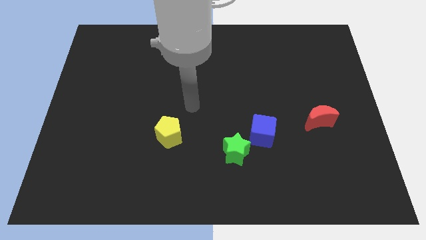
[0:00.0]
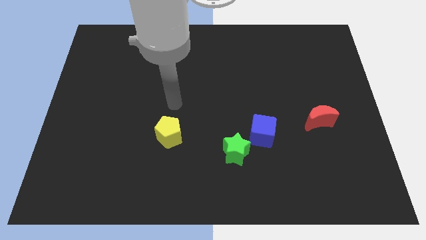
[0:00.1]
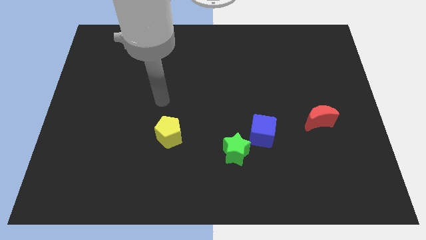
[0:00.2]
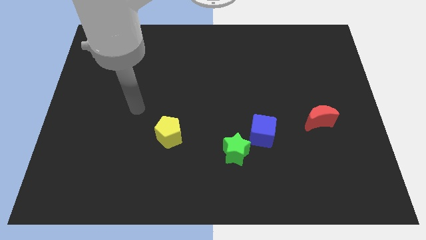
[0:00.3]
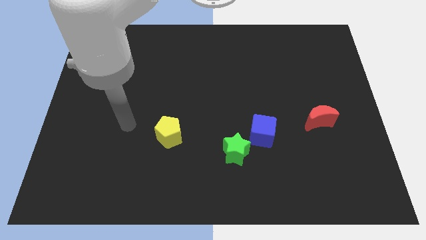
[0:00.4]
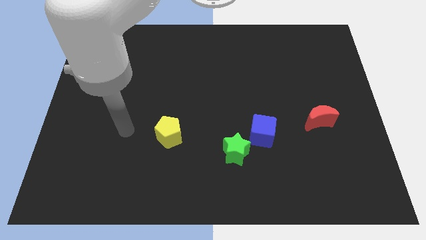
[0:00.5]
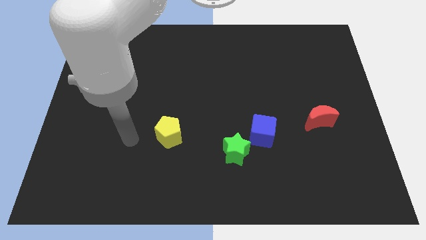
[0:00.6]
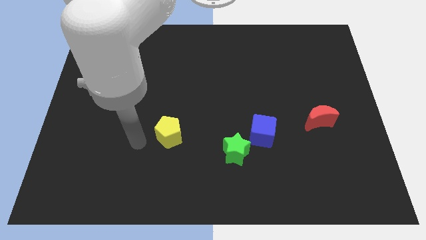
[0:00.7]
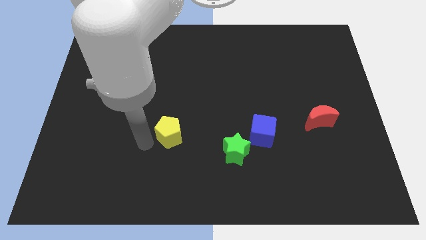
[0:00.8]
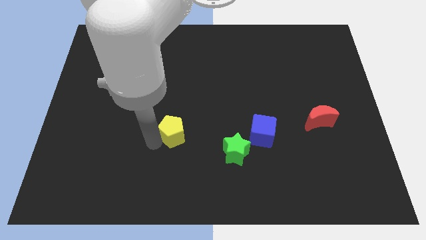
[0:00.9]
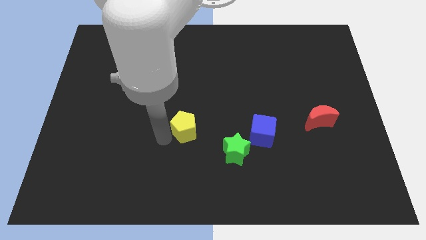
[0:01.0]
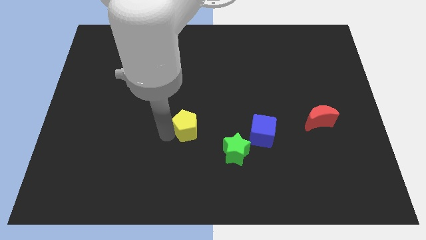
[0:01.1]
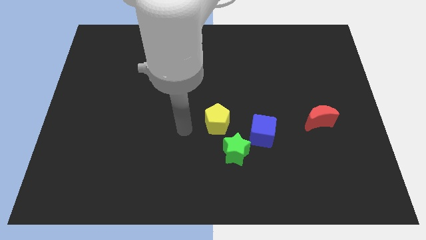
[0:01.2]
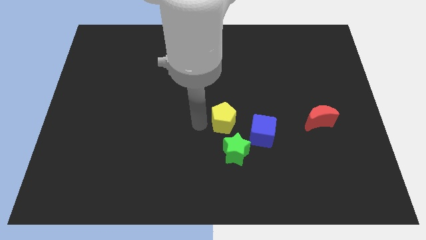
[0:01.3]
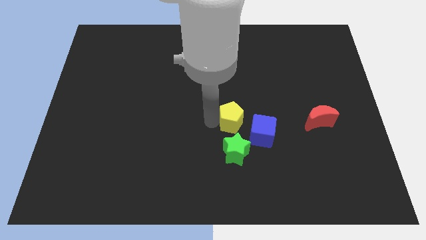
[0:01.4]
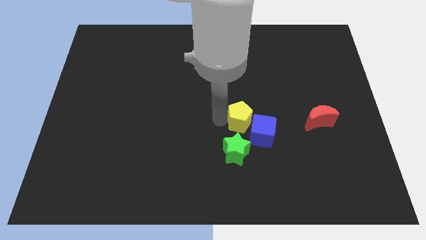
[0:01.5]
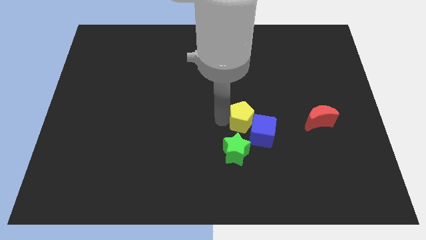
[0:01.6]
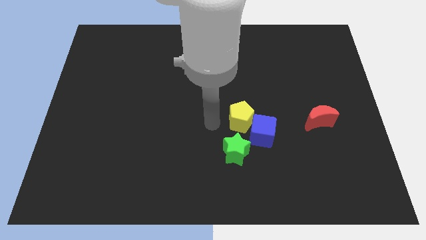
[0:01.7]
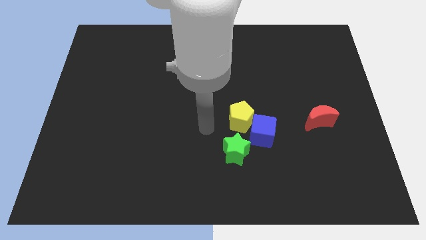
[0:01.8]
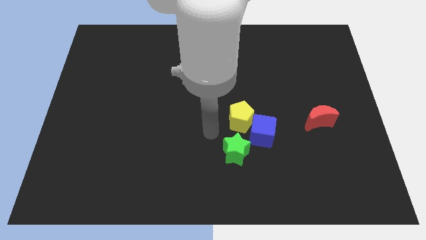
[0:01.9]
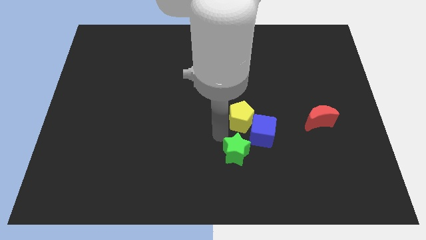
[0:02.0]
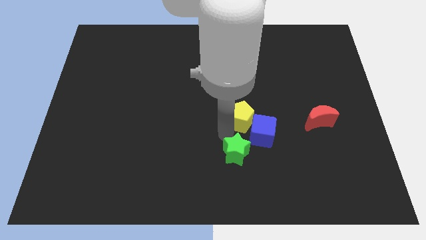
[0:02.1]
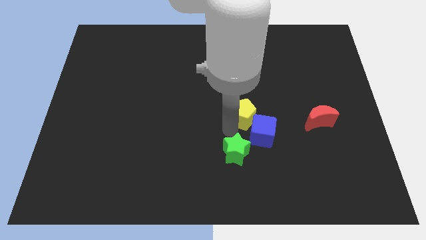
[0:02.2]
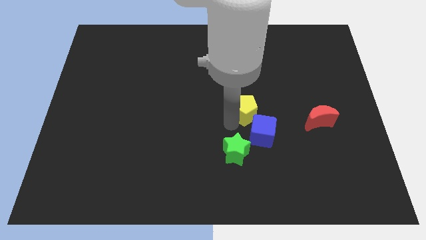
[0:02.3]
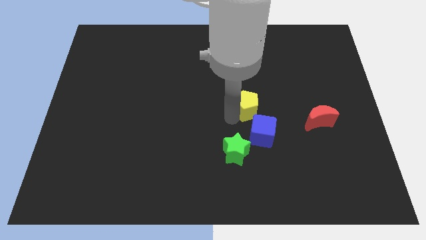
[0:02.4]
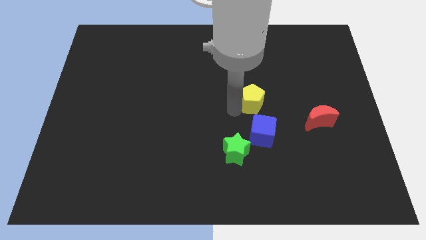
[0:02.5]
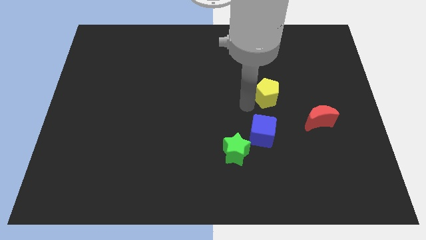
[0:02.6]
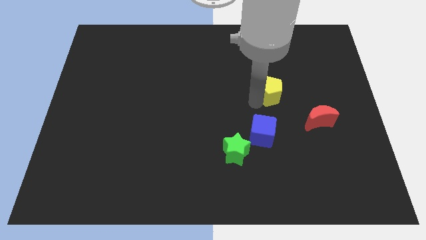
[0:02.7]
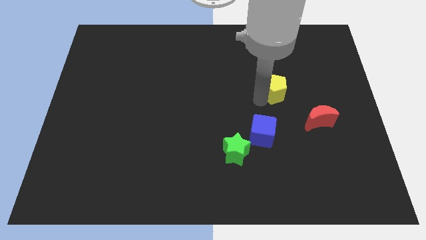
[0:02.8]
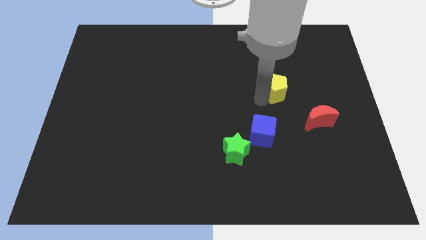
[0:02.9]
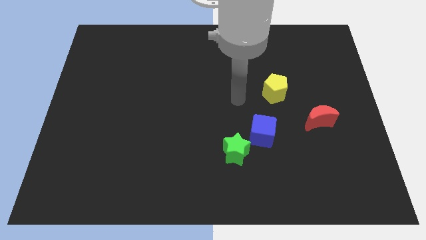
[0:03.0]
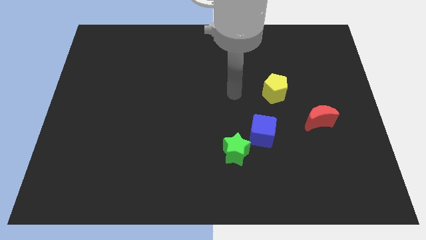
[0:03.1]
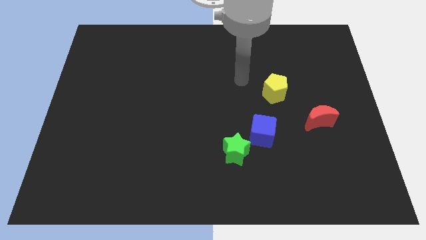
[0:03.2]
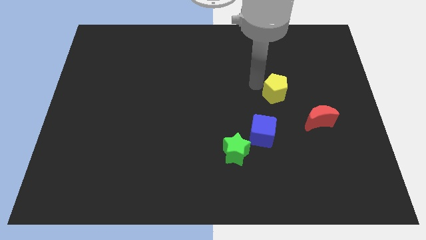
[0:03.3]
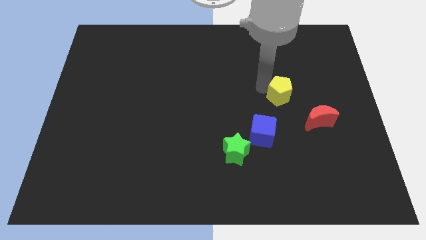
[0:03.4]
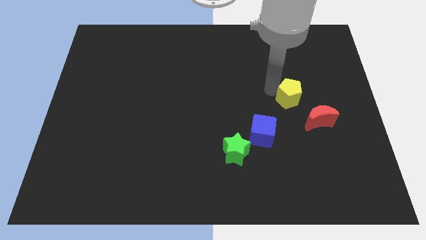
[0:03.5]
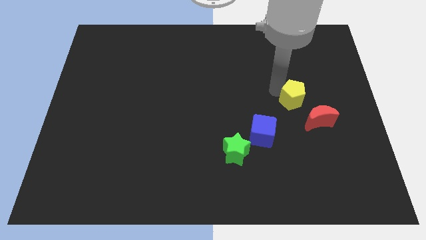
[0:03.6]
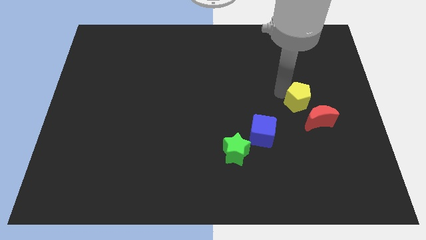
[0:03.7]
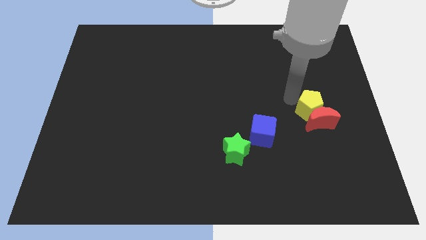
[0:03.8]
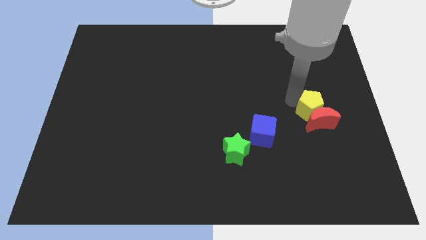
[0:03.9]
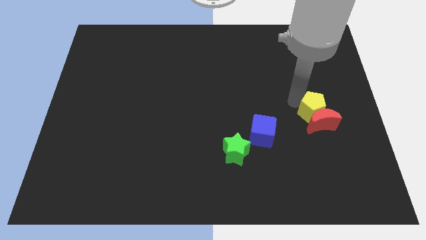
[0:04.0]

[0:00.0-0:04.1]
put the yellow pentagon close to the red moon

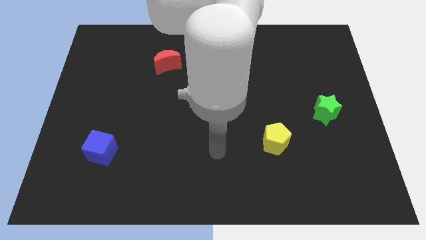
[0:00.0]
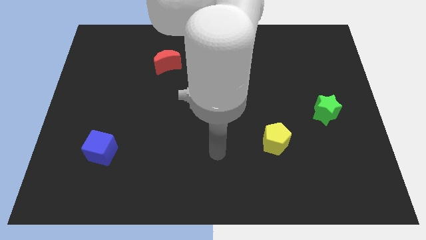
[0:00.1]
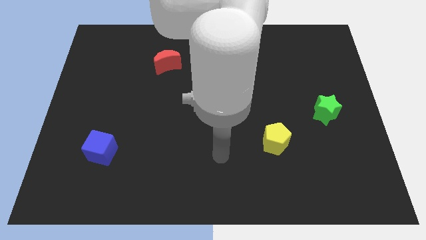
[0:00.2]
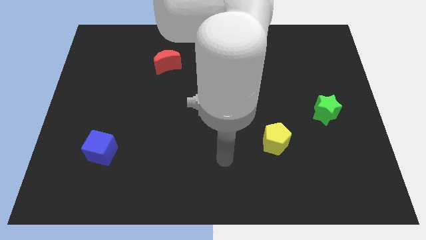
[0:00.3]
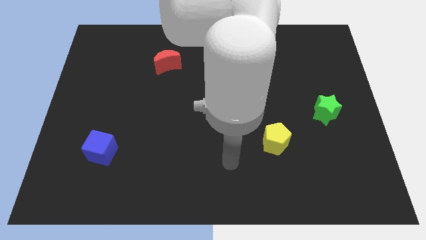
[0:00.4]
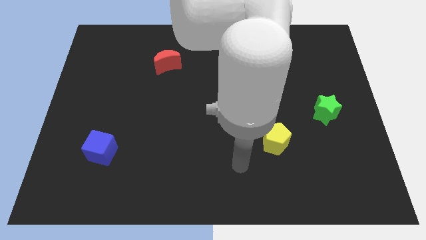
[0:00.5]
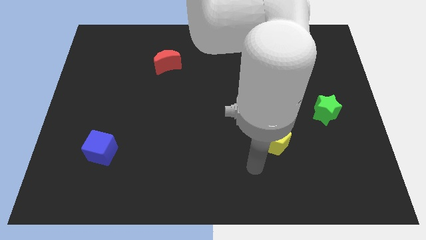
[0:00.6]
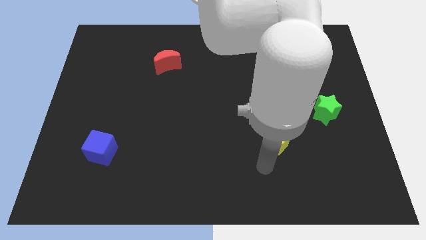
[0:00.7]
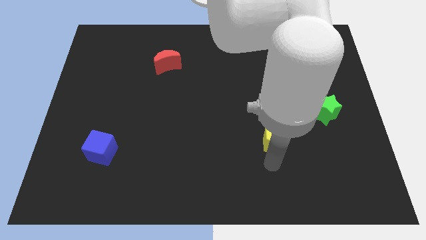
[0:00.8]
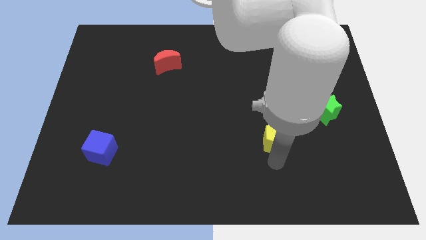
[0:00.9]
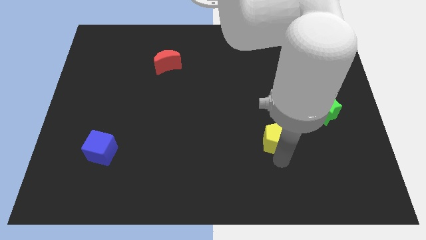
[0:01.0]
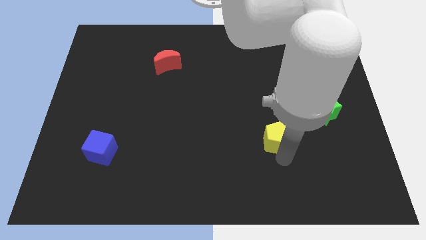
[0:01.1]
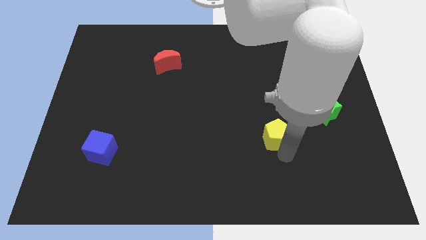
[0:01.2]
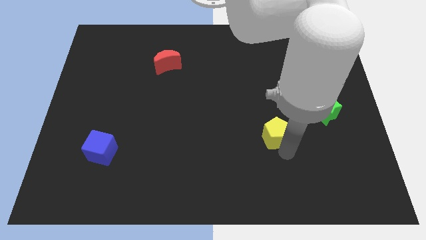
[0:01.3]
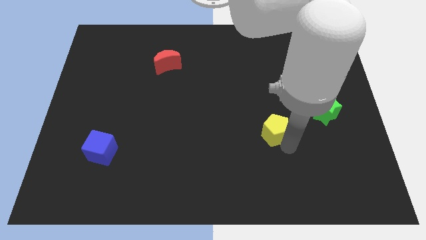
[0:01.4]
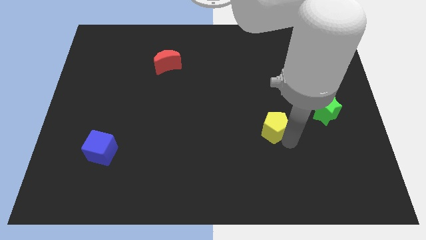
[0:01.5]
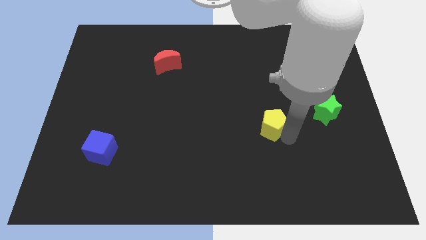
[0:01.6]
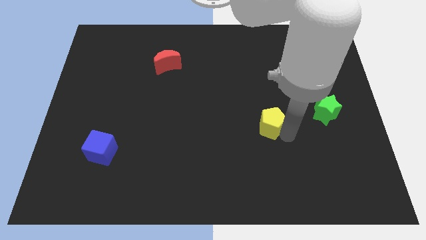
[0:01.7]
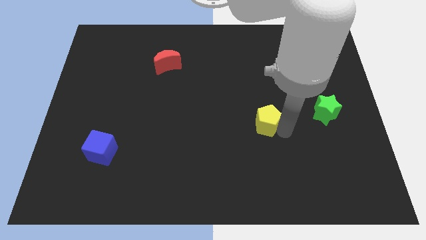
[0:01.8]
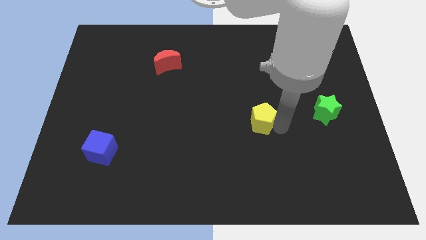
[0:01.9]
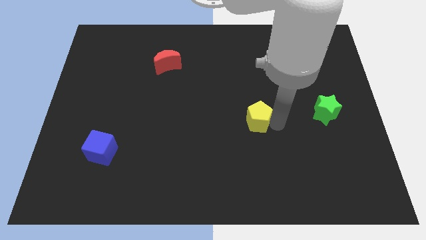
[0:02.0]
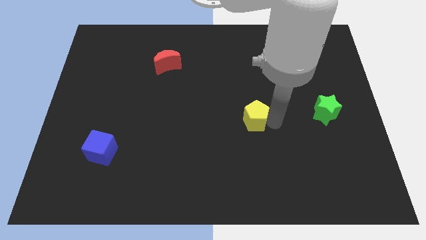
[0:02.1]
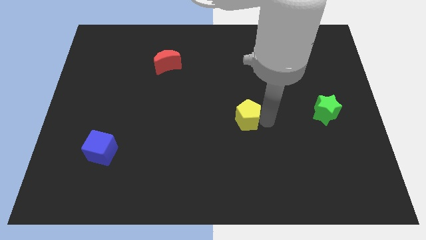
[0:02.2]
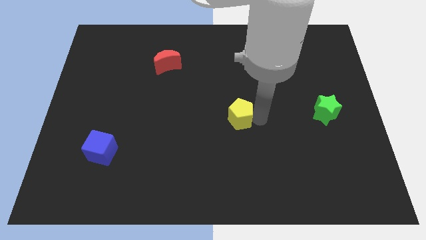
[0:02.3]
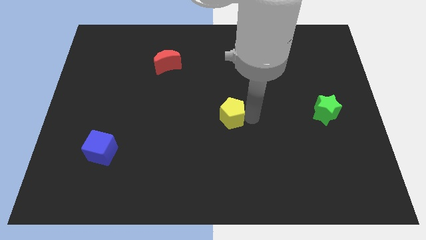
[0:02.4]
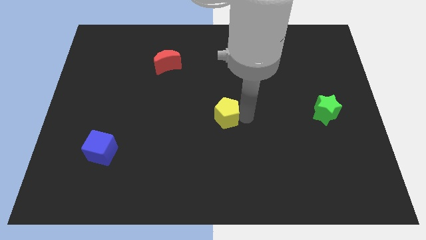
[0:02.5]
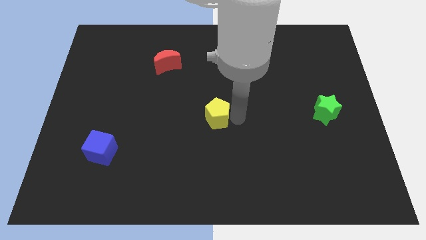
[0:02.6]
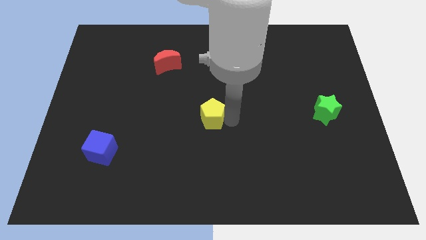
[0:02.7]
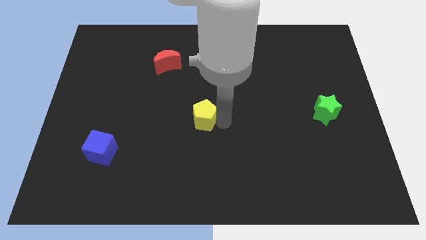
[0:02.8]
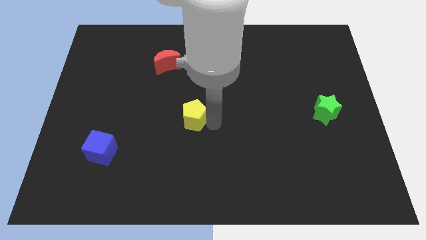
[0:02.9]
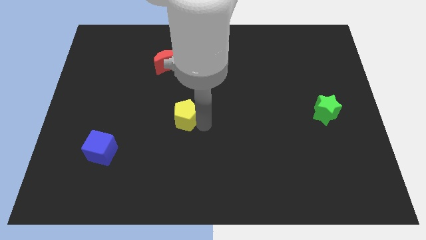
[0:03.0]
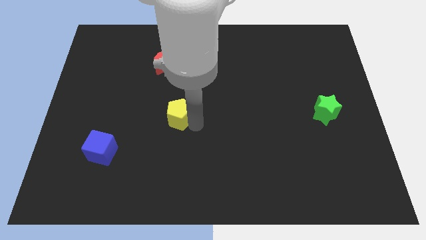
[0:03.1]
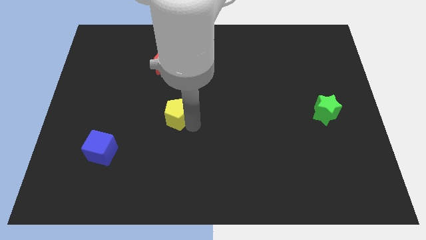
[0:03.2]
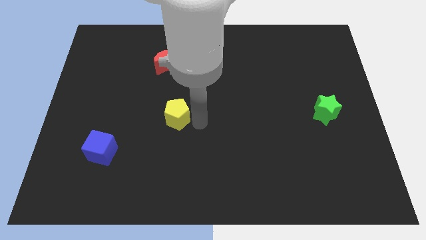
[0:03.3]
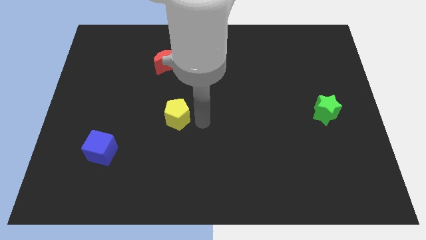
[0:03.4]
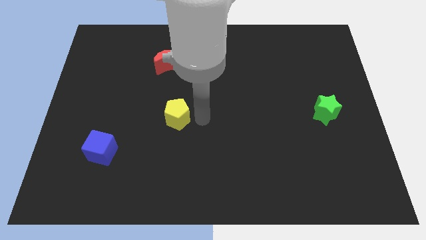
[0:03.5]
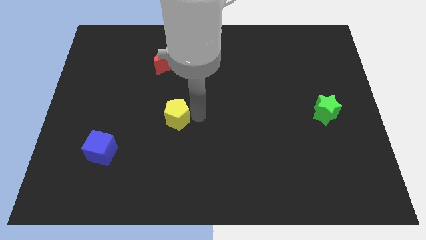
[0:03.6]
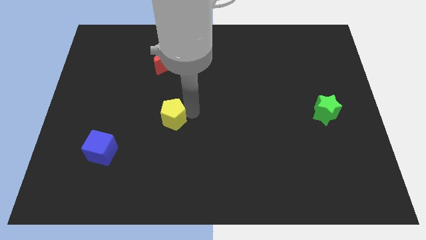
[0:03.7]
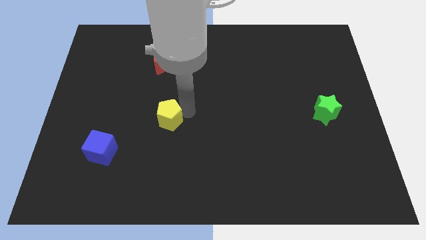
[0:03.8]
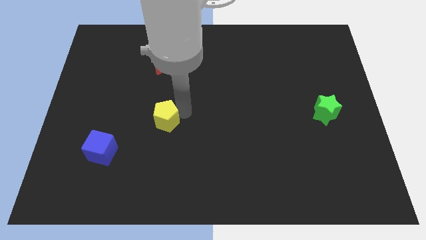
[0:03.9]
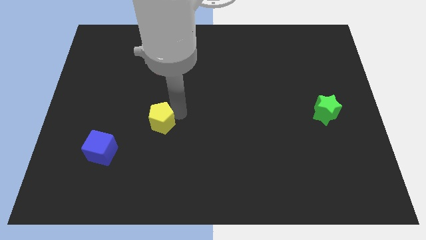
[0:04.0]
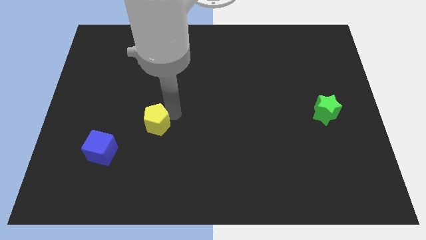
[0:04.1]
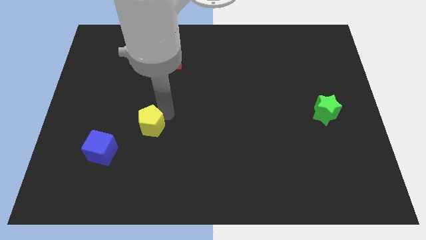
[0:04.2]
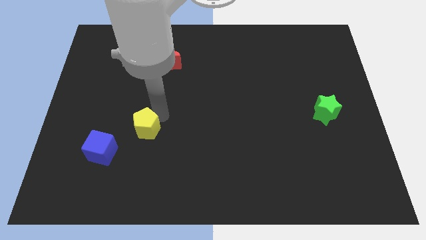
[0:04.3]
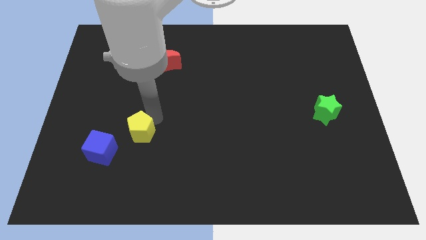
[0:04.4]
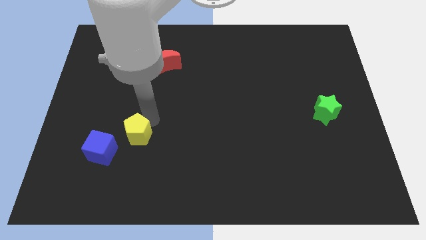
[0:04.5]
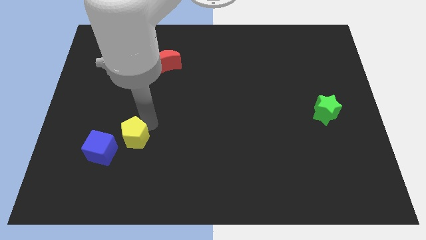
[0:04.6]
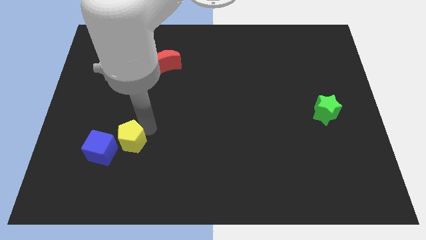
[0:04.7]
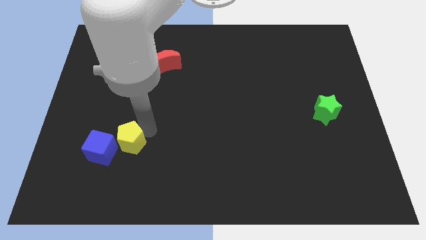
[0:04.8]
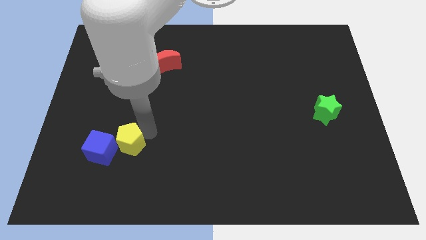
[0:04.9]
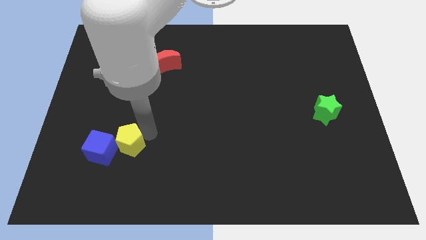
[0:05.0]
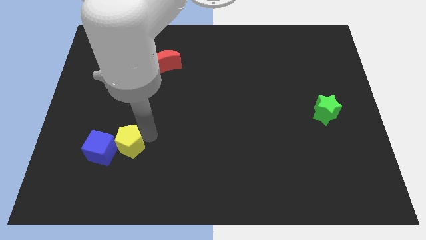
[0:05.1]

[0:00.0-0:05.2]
push the yellow pentagon next to the cube
